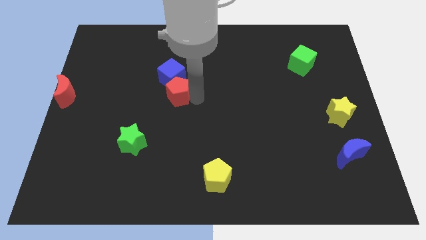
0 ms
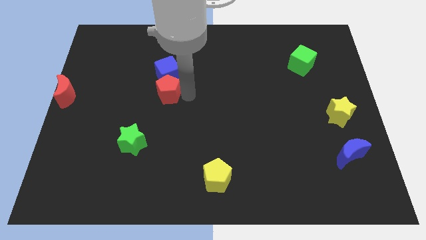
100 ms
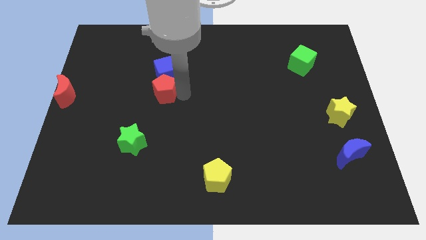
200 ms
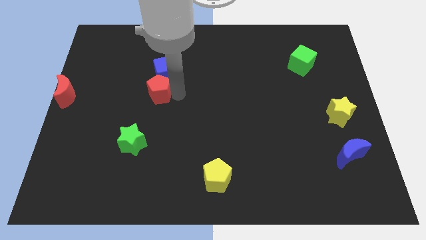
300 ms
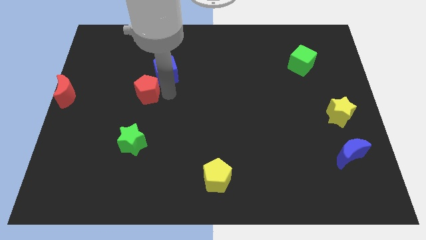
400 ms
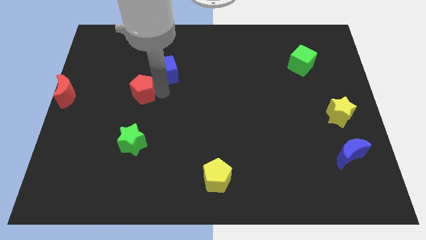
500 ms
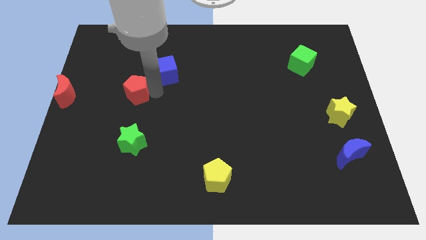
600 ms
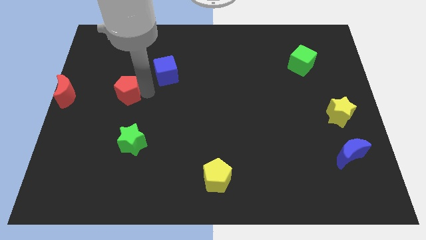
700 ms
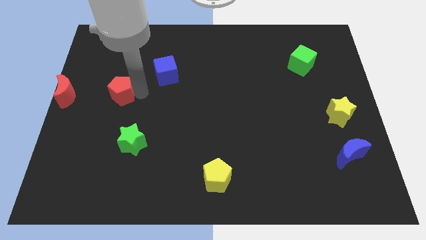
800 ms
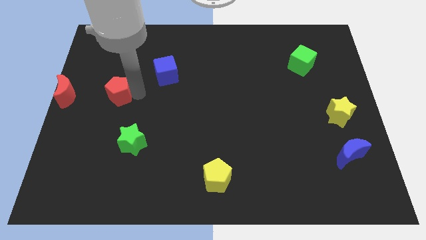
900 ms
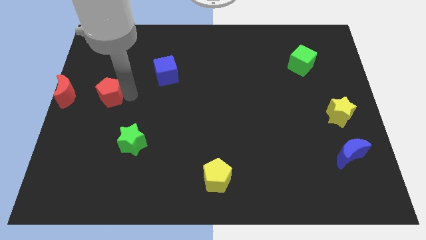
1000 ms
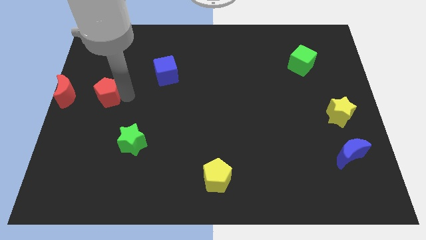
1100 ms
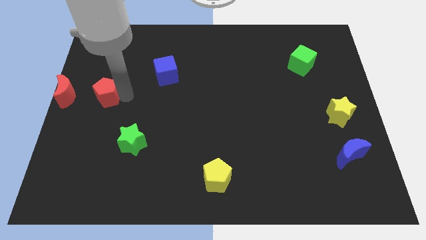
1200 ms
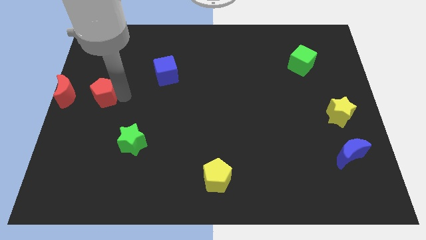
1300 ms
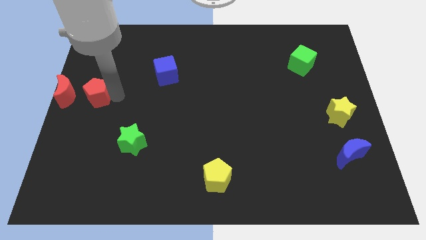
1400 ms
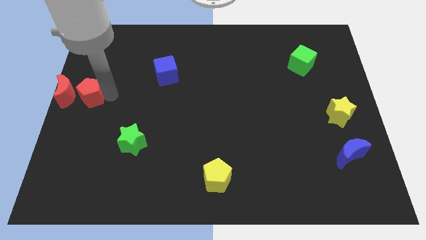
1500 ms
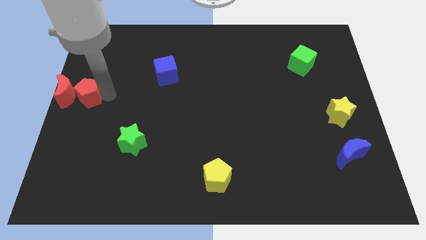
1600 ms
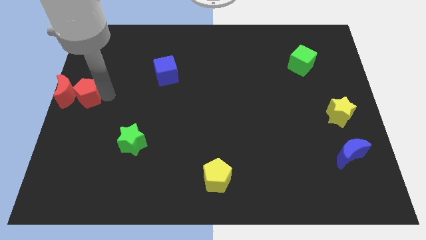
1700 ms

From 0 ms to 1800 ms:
place the red pentagon towards the right side of the red crescent

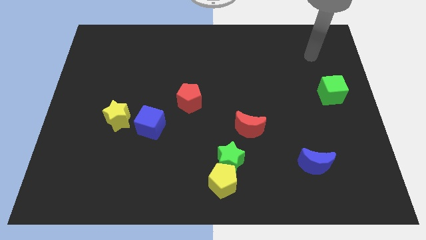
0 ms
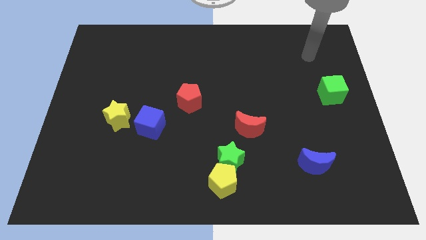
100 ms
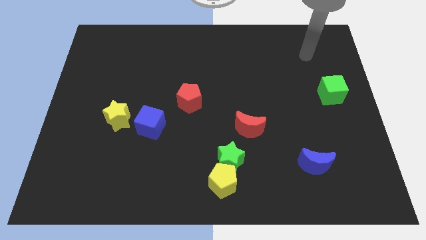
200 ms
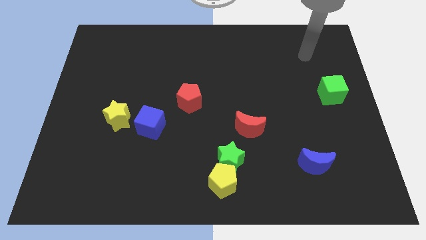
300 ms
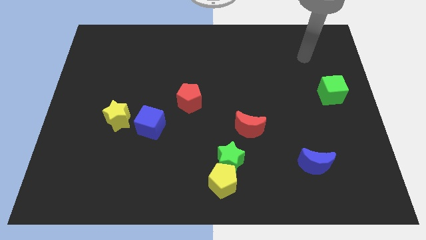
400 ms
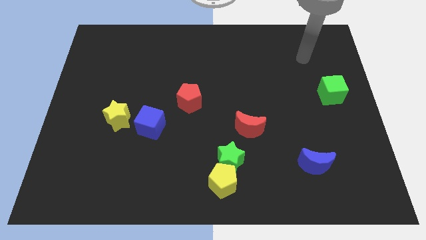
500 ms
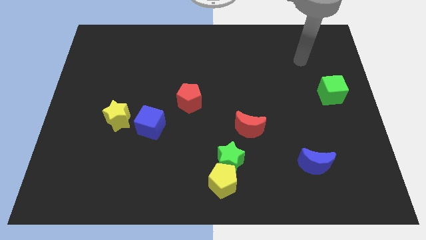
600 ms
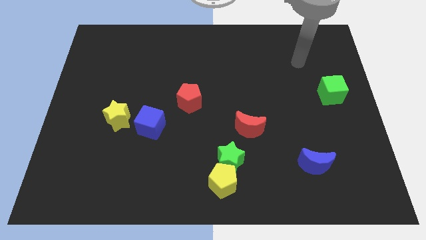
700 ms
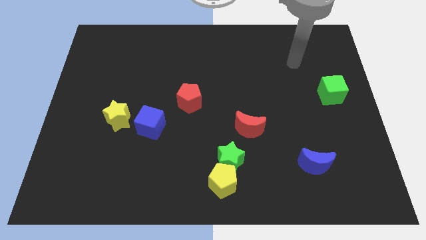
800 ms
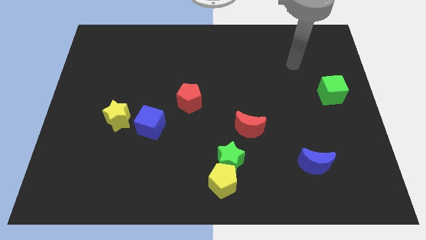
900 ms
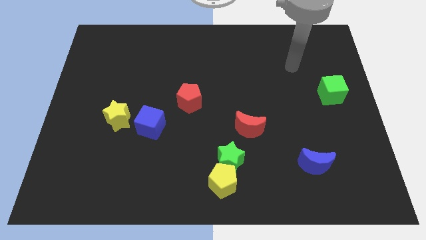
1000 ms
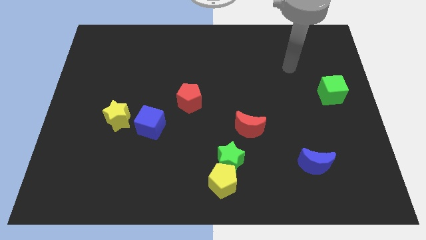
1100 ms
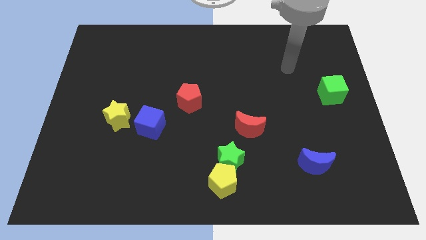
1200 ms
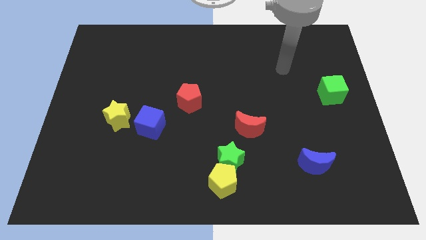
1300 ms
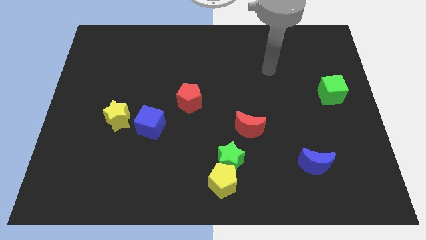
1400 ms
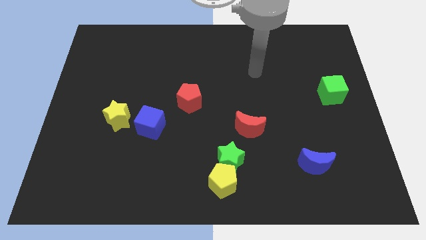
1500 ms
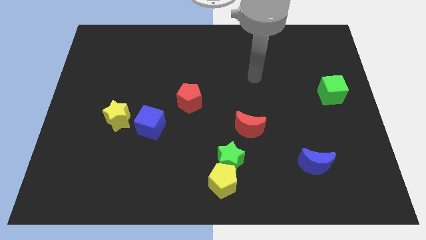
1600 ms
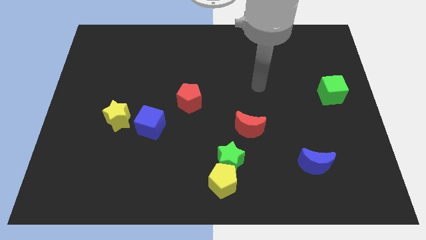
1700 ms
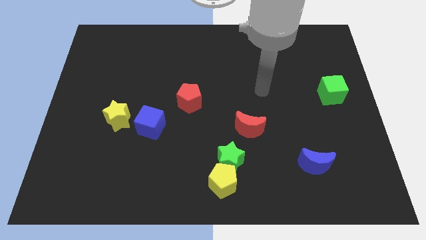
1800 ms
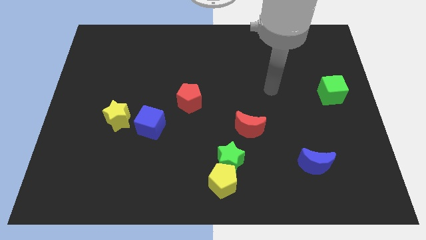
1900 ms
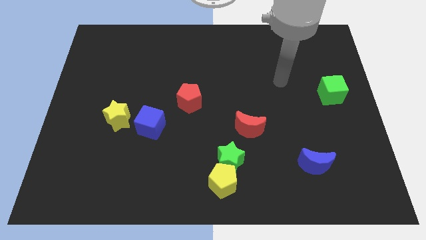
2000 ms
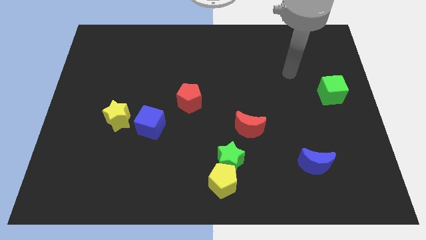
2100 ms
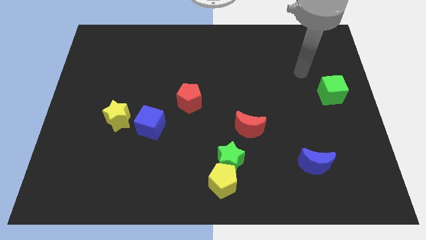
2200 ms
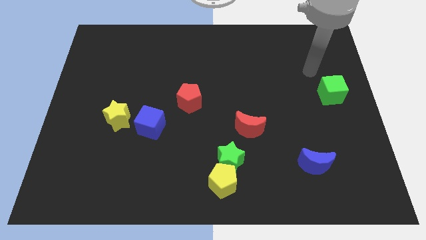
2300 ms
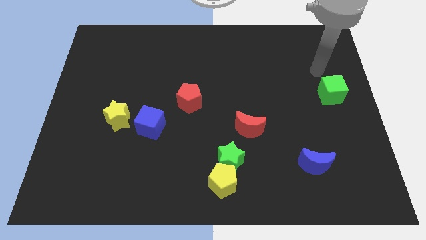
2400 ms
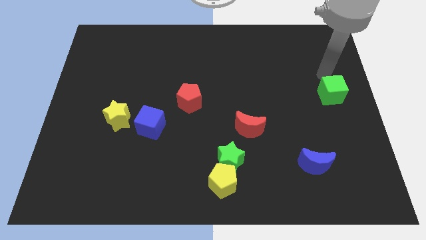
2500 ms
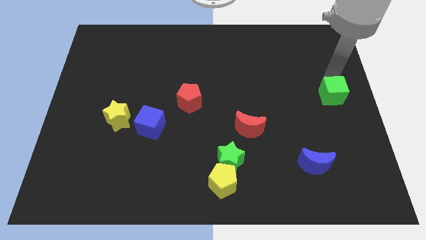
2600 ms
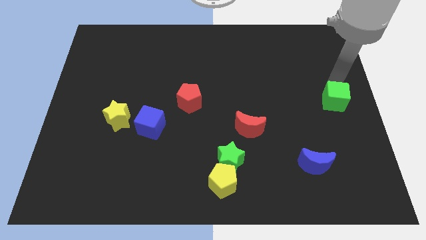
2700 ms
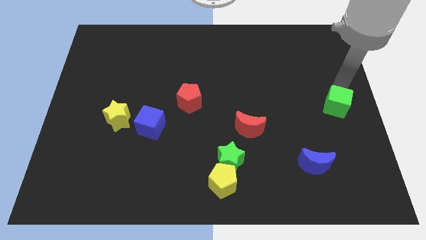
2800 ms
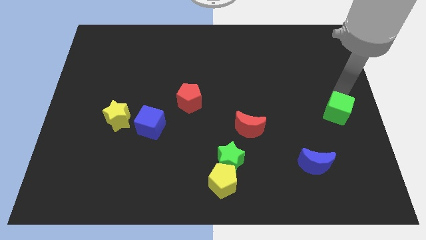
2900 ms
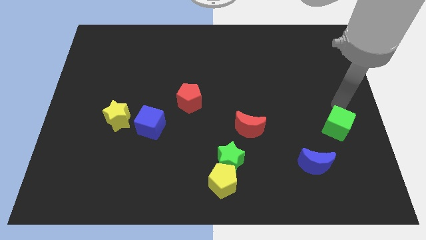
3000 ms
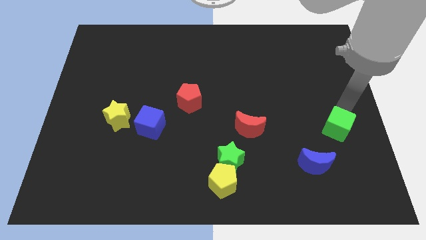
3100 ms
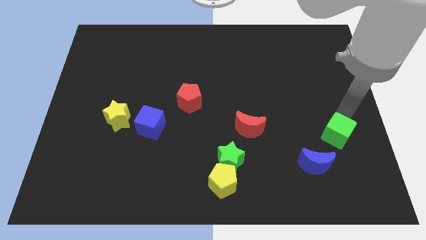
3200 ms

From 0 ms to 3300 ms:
push the green cube towards the blue moon

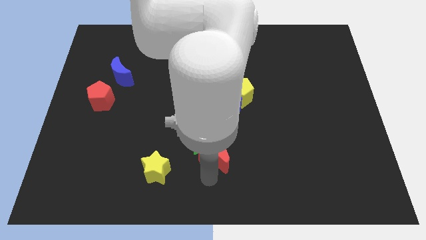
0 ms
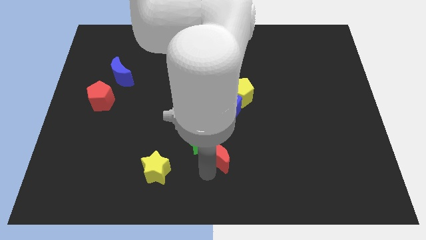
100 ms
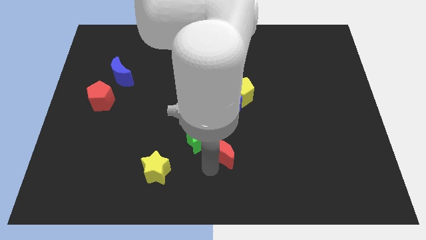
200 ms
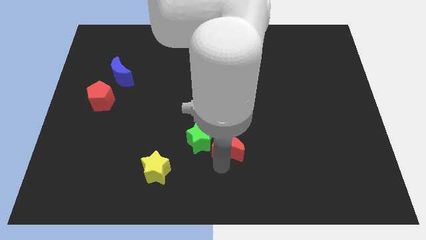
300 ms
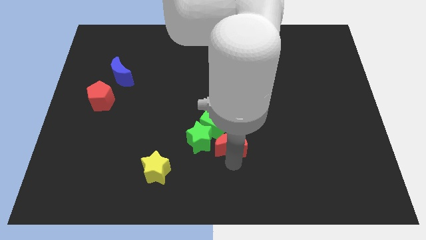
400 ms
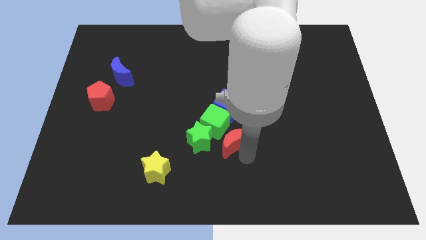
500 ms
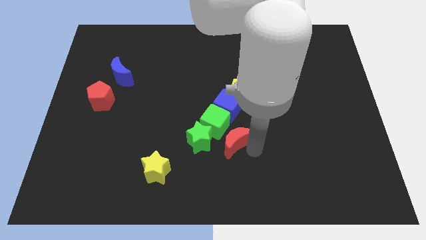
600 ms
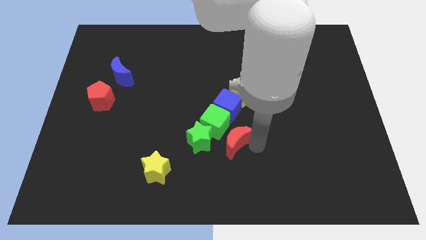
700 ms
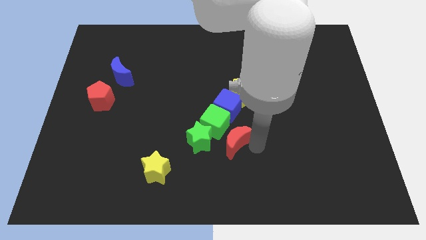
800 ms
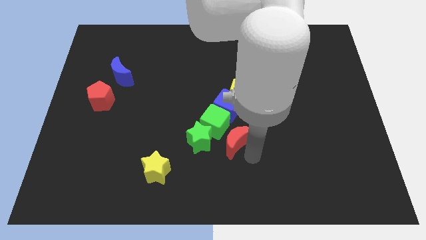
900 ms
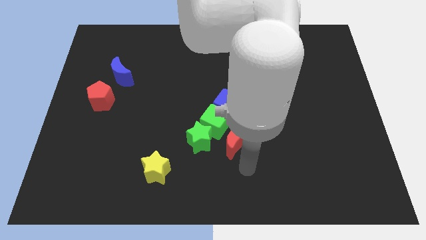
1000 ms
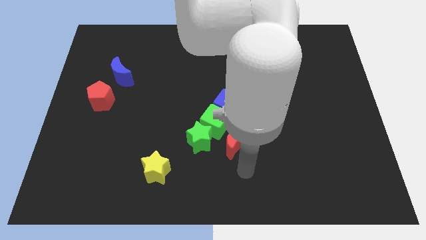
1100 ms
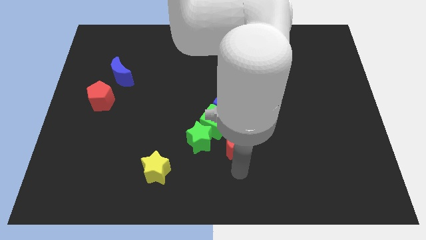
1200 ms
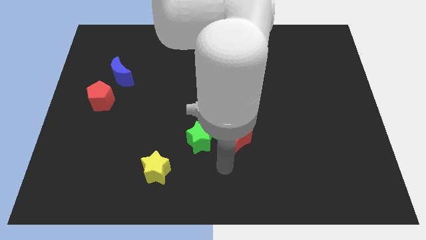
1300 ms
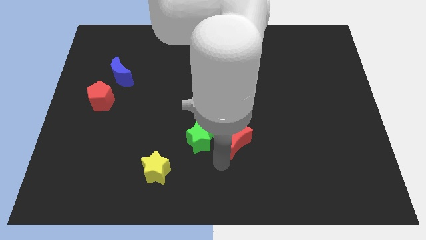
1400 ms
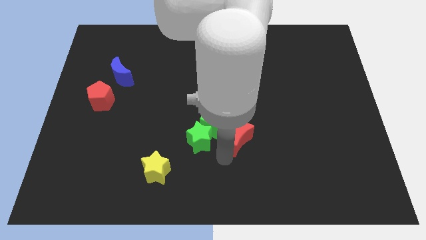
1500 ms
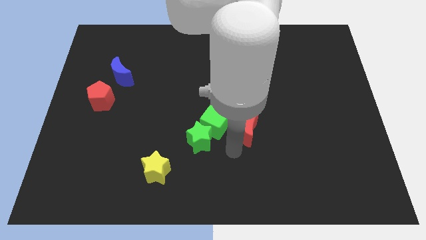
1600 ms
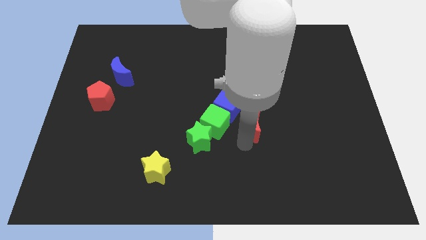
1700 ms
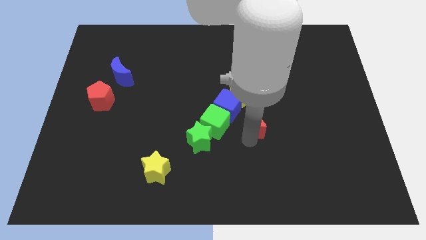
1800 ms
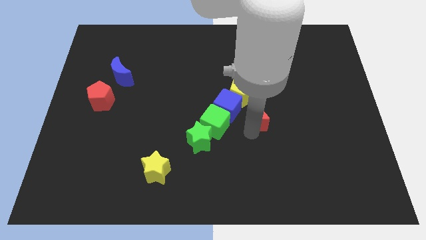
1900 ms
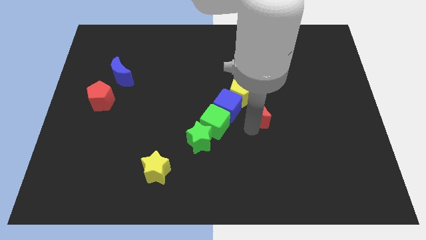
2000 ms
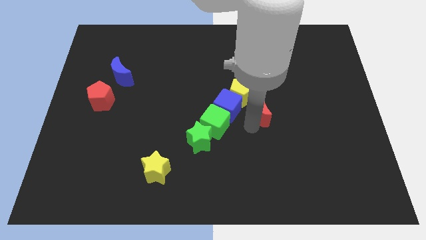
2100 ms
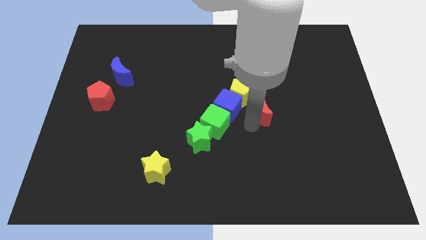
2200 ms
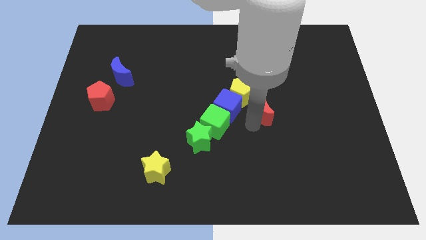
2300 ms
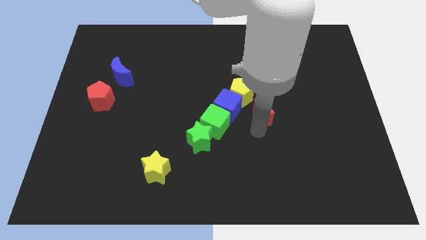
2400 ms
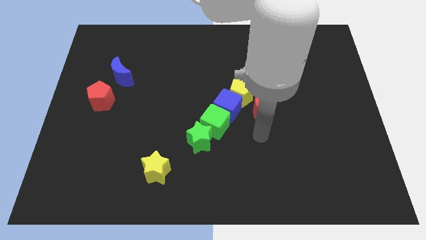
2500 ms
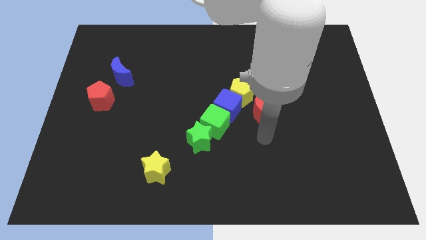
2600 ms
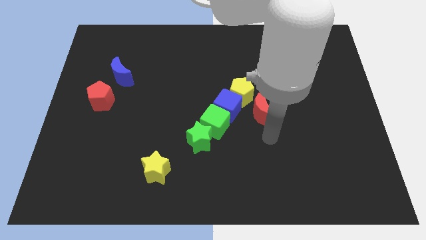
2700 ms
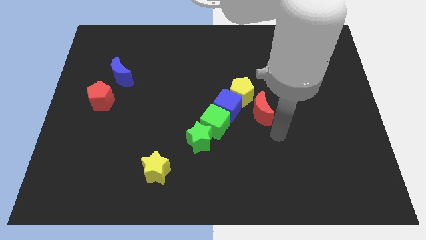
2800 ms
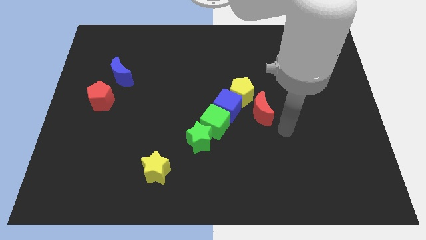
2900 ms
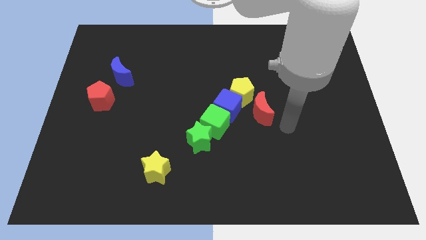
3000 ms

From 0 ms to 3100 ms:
separate the red moon from the vertical line

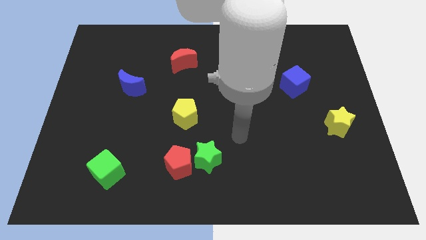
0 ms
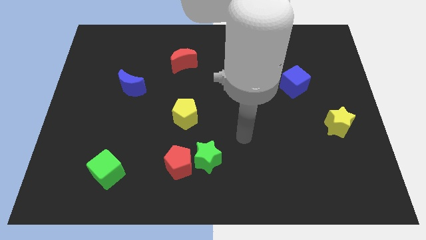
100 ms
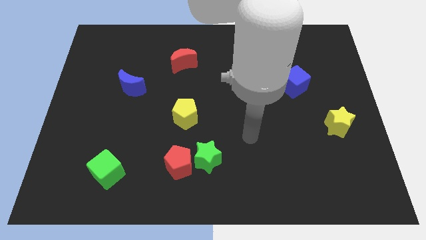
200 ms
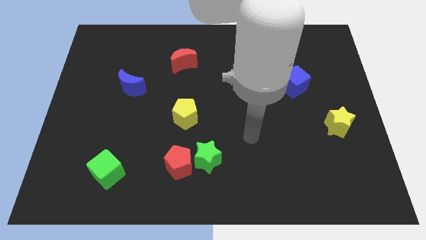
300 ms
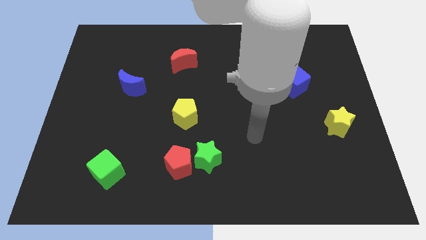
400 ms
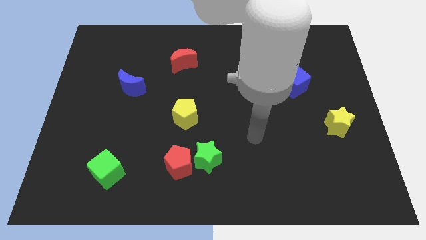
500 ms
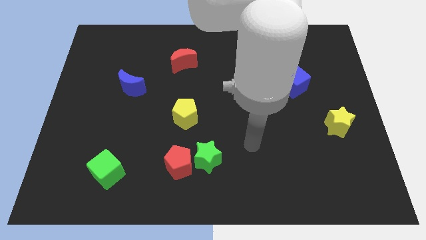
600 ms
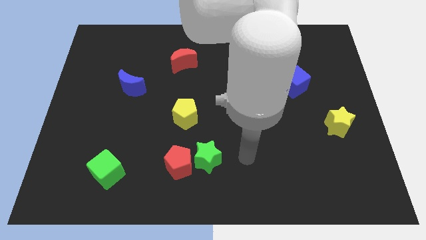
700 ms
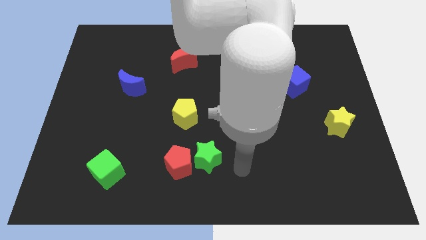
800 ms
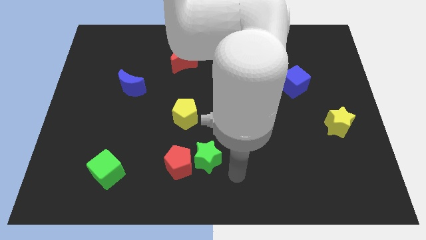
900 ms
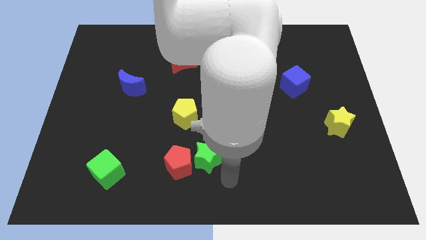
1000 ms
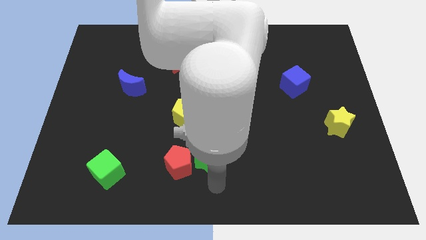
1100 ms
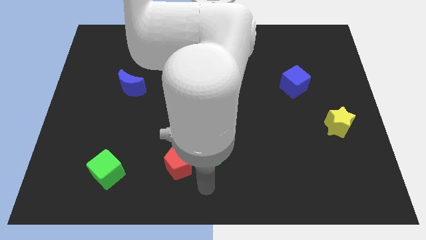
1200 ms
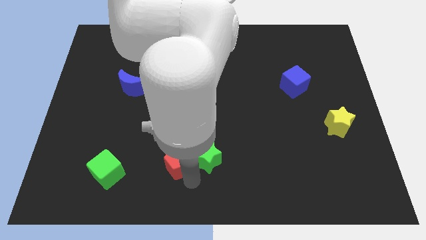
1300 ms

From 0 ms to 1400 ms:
move your arm below the red pentagon
